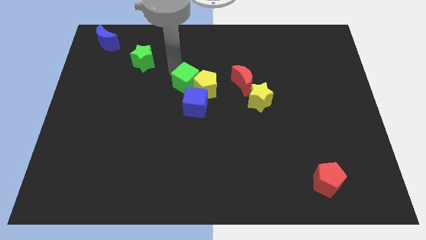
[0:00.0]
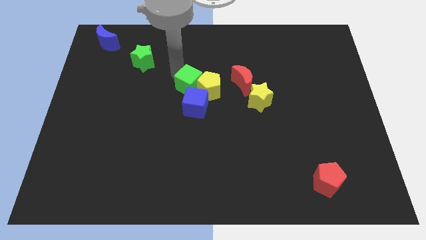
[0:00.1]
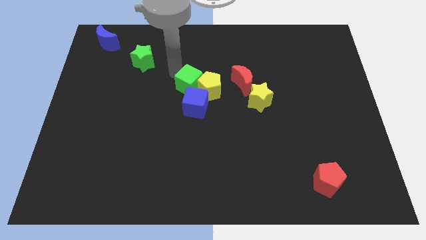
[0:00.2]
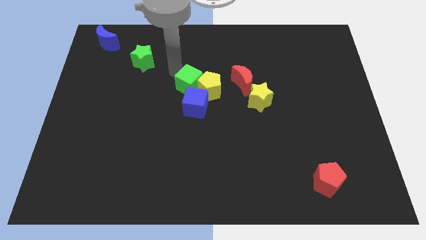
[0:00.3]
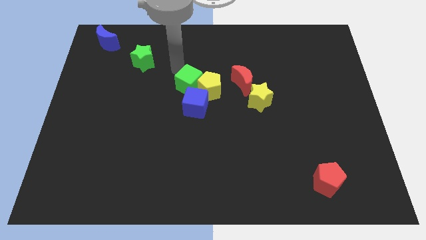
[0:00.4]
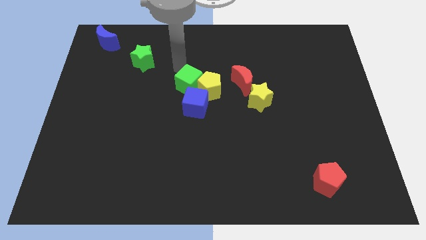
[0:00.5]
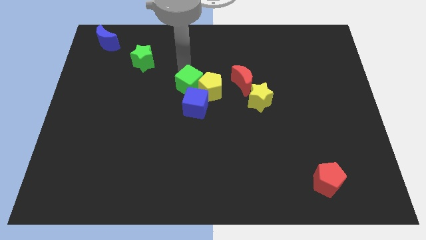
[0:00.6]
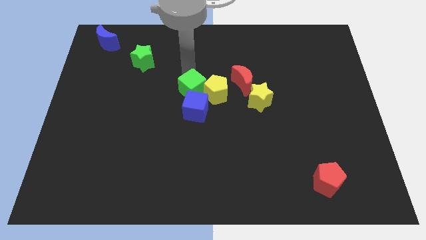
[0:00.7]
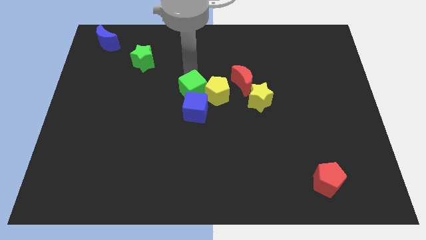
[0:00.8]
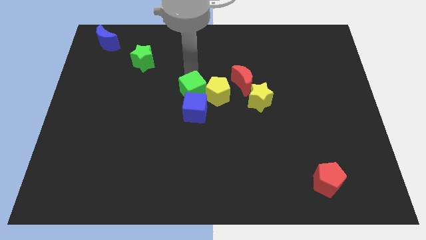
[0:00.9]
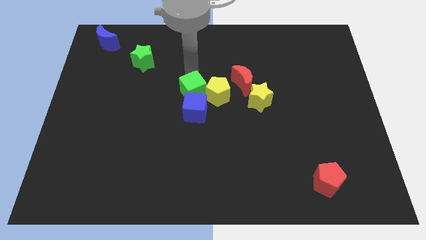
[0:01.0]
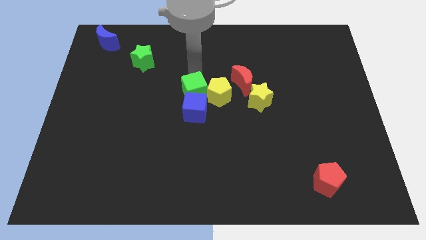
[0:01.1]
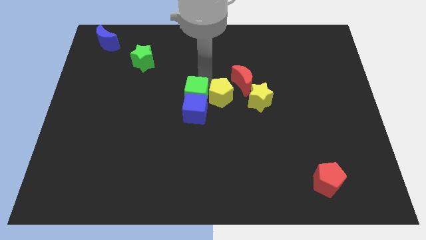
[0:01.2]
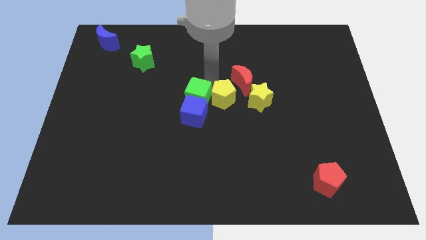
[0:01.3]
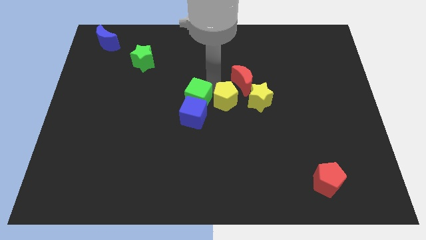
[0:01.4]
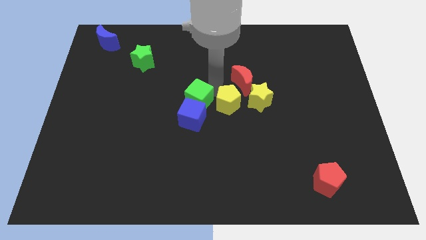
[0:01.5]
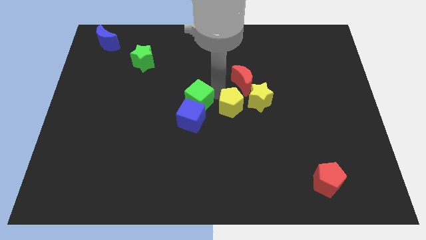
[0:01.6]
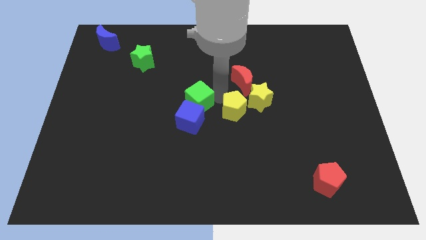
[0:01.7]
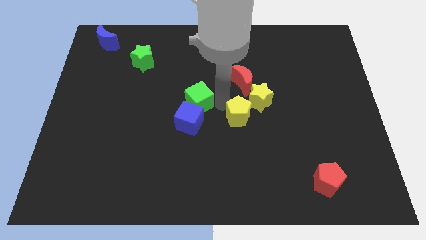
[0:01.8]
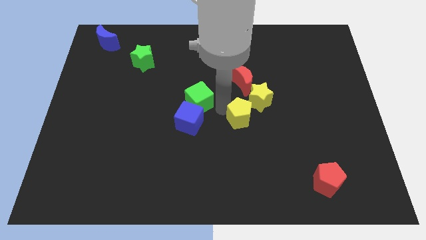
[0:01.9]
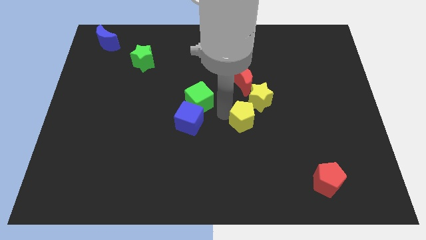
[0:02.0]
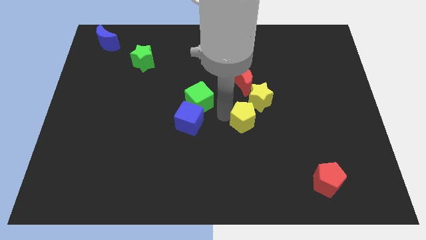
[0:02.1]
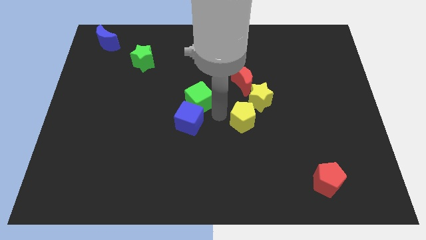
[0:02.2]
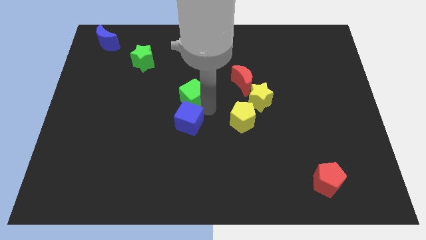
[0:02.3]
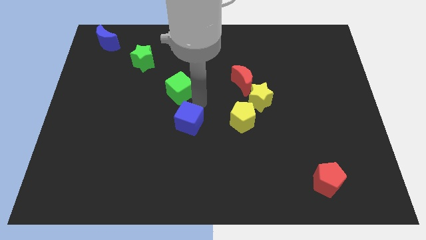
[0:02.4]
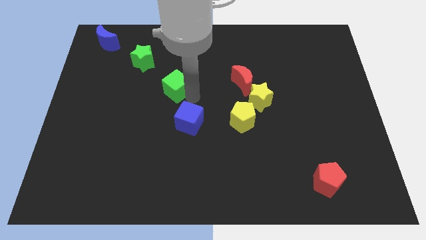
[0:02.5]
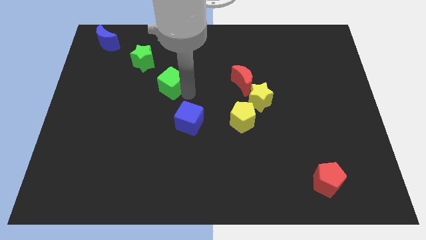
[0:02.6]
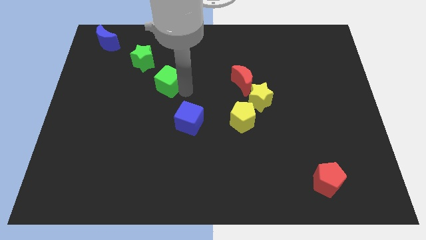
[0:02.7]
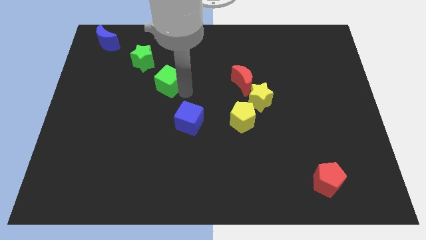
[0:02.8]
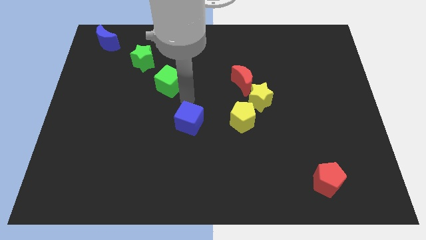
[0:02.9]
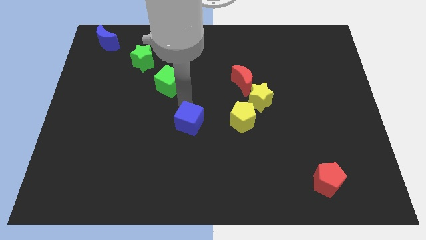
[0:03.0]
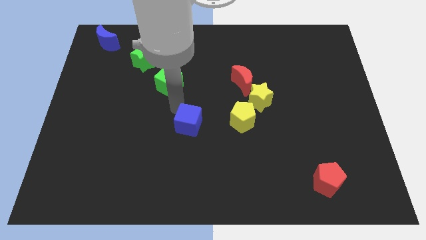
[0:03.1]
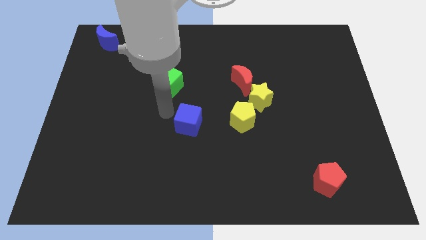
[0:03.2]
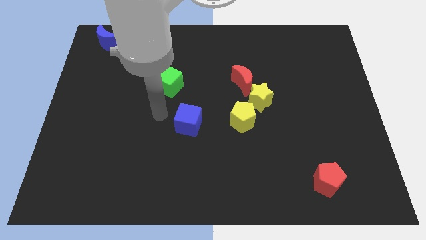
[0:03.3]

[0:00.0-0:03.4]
separate green cube from yellow pentagon

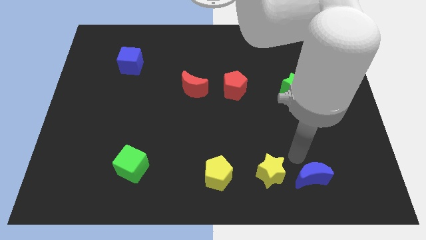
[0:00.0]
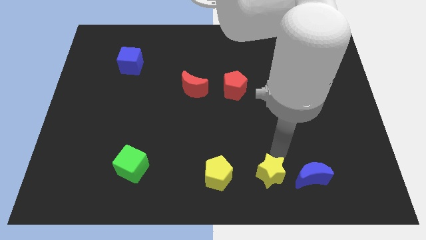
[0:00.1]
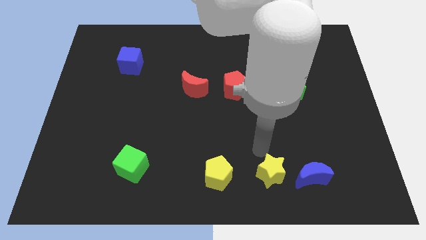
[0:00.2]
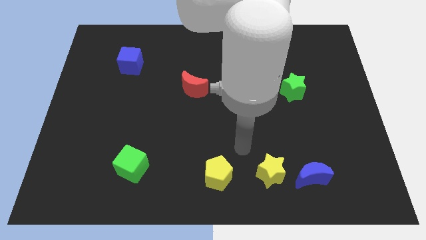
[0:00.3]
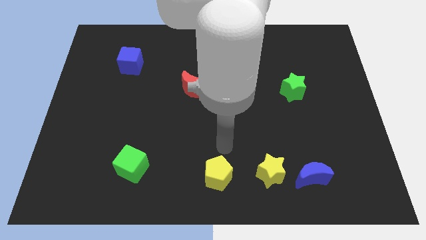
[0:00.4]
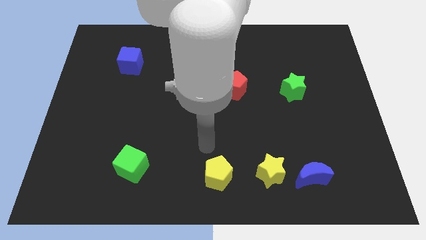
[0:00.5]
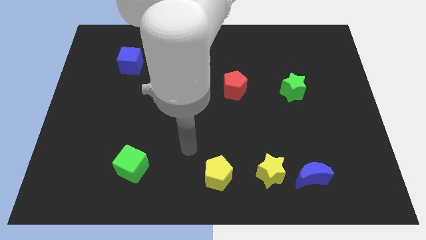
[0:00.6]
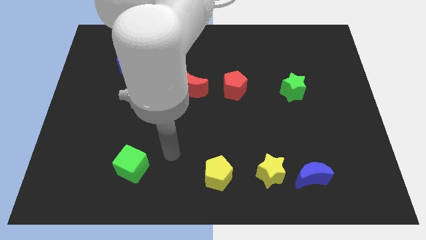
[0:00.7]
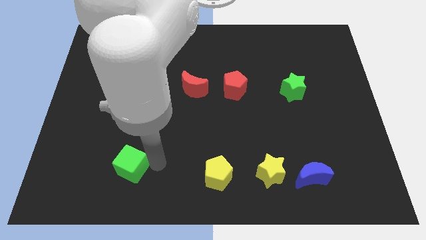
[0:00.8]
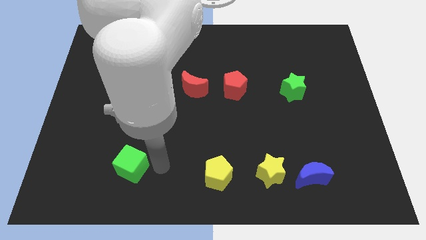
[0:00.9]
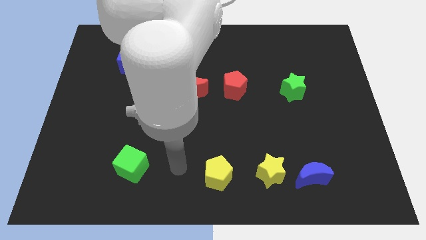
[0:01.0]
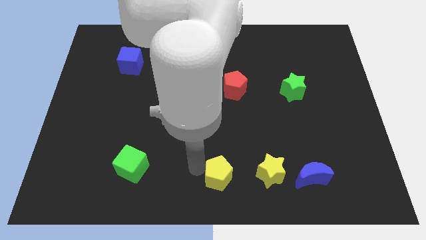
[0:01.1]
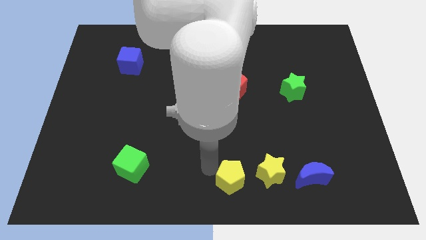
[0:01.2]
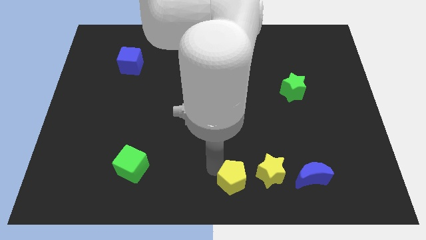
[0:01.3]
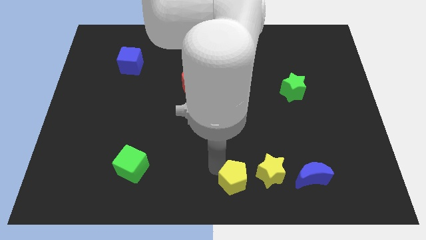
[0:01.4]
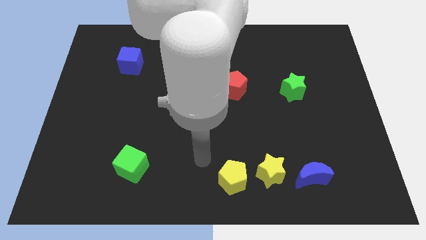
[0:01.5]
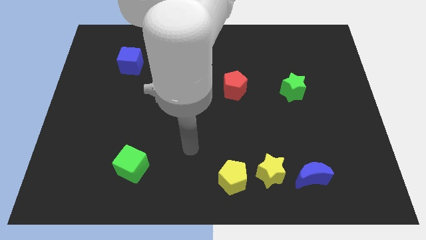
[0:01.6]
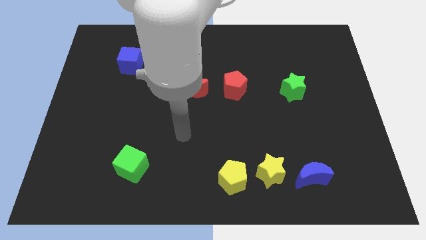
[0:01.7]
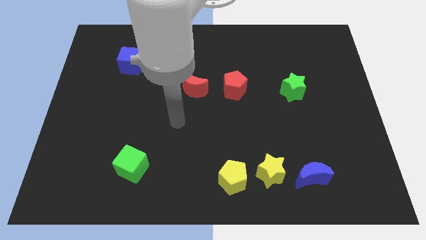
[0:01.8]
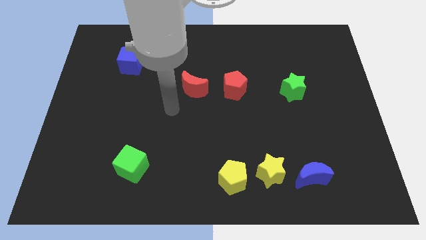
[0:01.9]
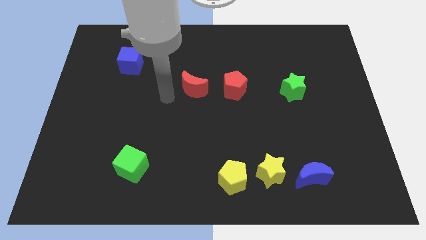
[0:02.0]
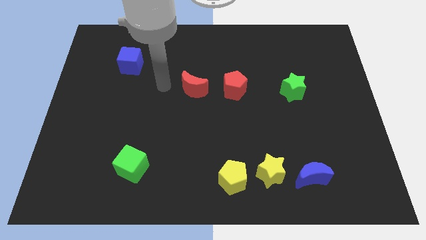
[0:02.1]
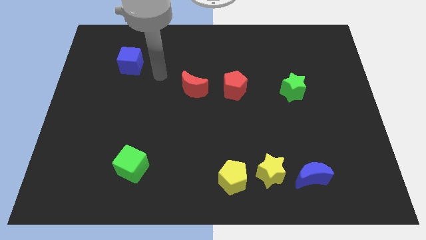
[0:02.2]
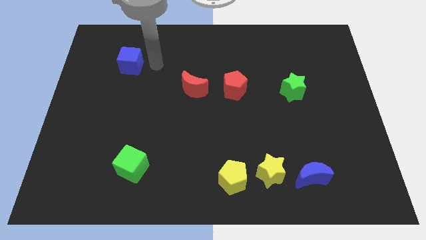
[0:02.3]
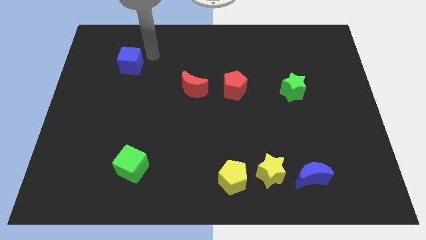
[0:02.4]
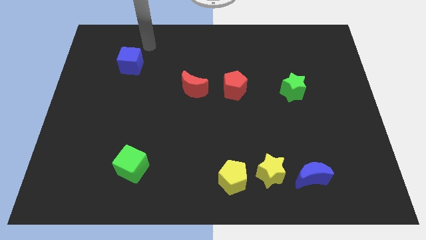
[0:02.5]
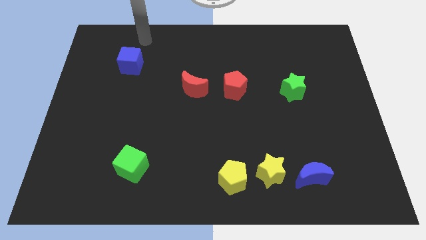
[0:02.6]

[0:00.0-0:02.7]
slightly push the yellow pentagon towards the right

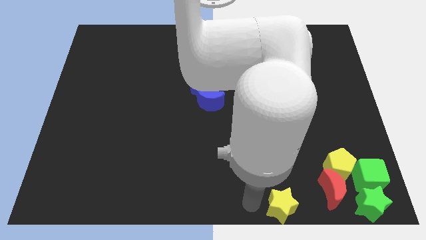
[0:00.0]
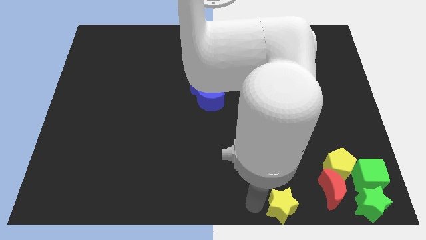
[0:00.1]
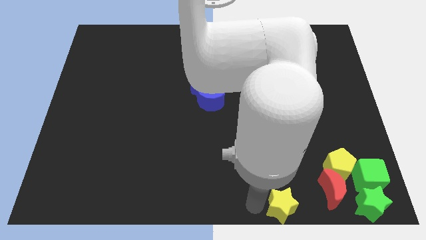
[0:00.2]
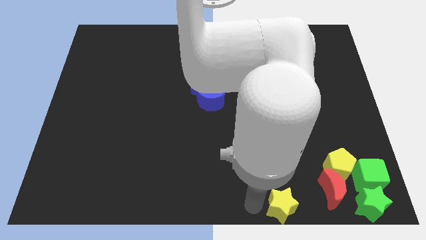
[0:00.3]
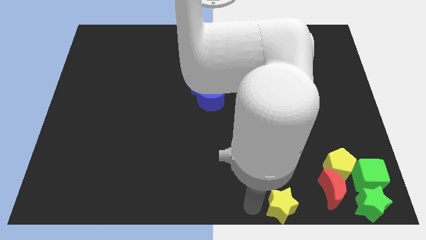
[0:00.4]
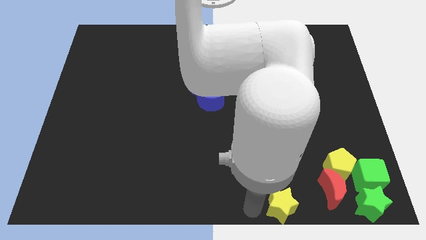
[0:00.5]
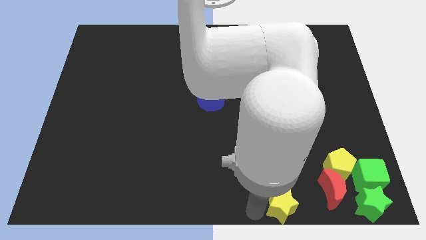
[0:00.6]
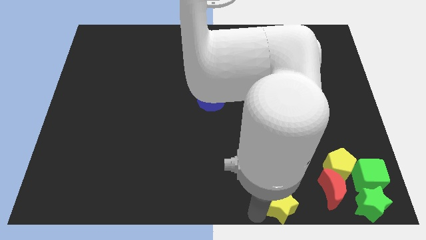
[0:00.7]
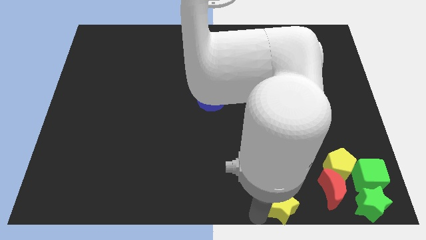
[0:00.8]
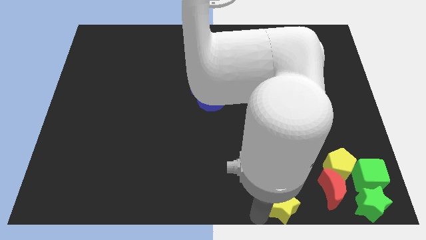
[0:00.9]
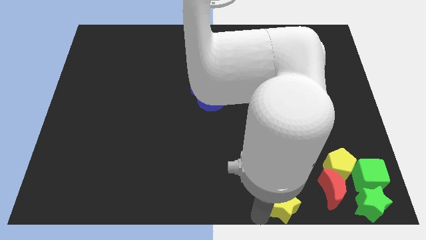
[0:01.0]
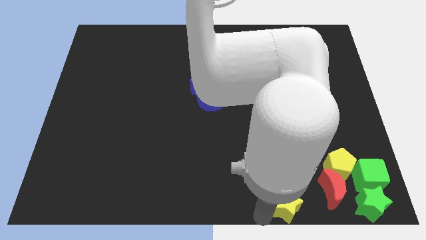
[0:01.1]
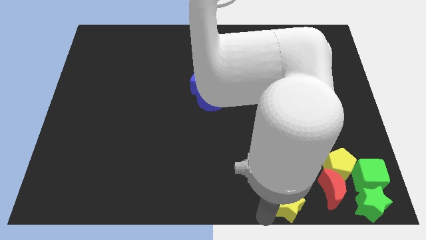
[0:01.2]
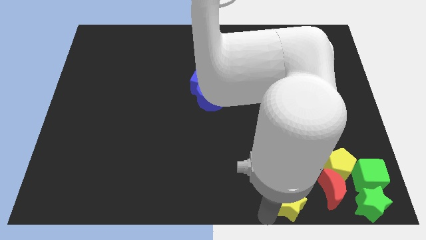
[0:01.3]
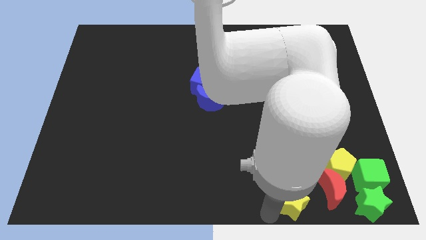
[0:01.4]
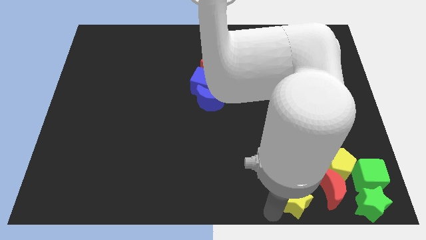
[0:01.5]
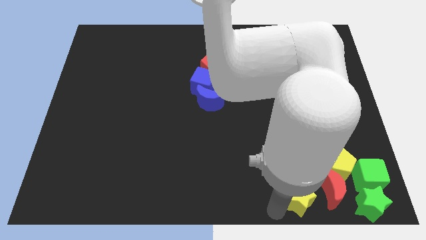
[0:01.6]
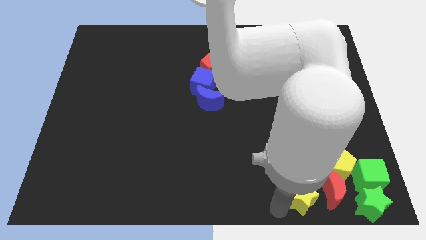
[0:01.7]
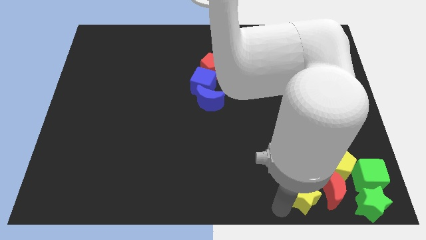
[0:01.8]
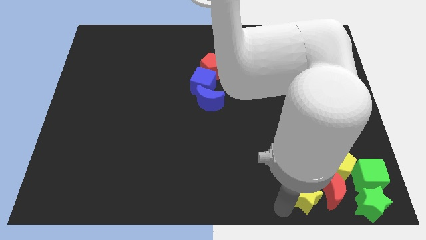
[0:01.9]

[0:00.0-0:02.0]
place the yellow star to the left side of red moon

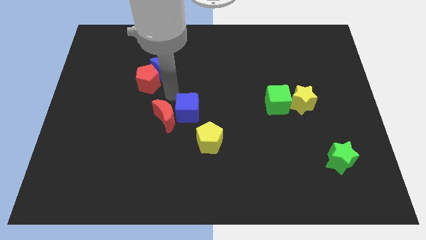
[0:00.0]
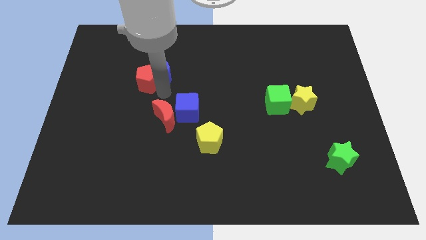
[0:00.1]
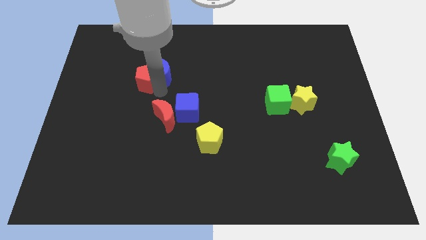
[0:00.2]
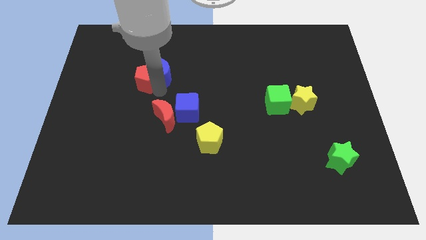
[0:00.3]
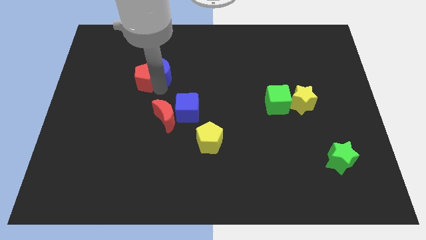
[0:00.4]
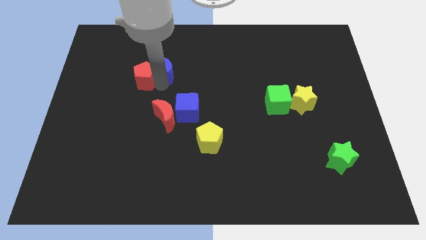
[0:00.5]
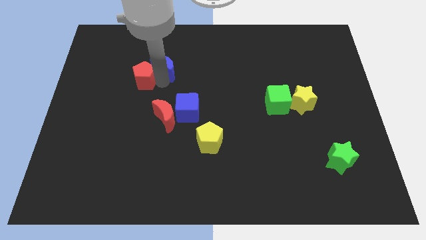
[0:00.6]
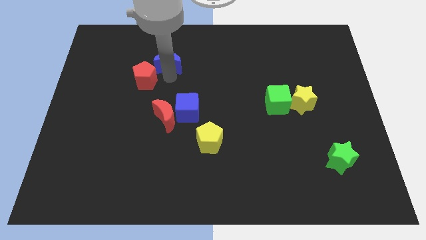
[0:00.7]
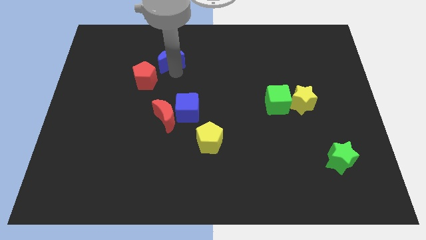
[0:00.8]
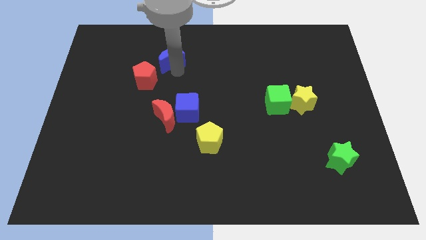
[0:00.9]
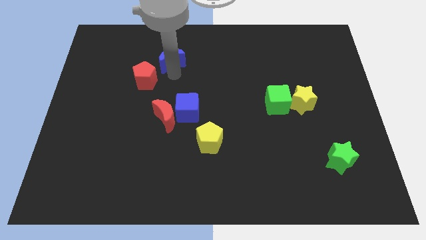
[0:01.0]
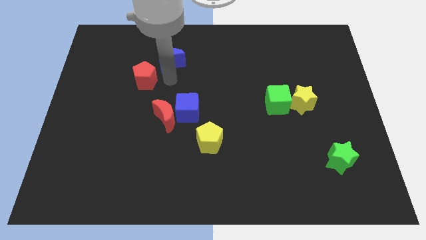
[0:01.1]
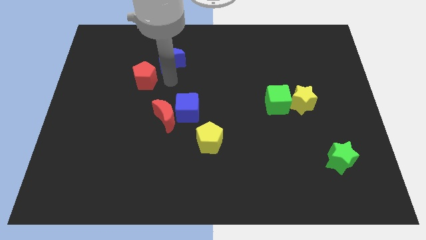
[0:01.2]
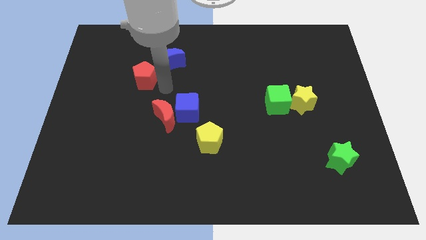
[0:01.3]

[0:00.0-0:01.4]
move the blue crescent vertically above the red crescent
